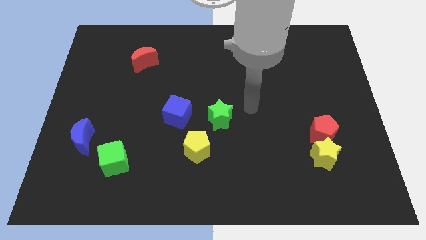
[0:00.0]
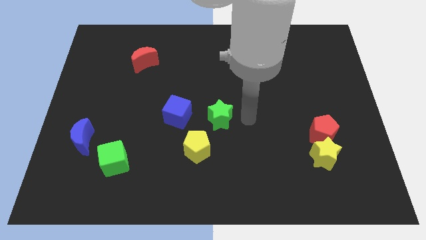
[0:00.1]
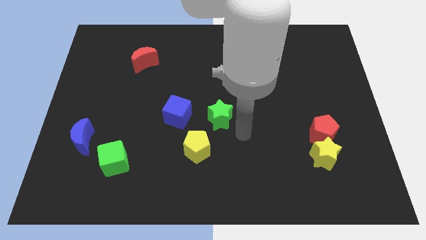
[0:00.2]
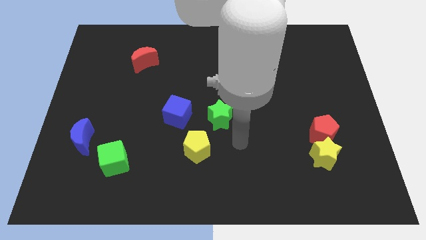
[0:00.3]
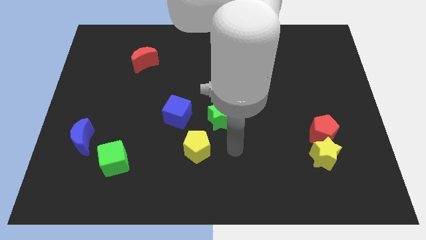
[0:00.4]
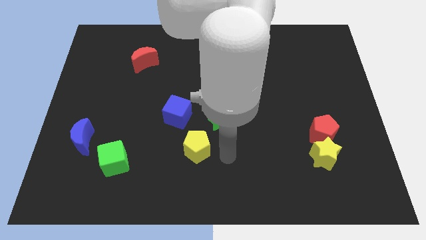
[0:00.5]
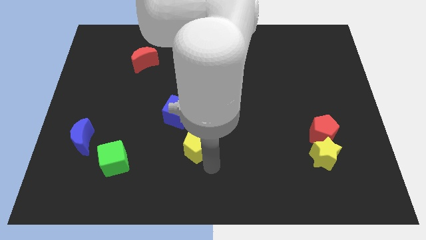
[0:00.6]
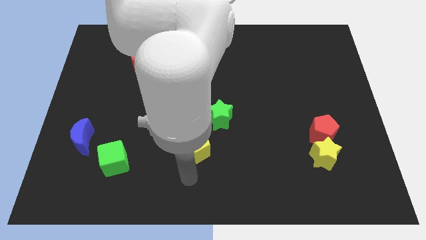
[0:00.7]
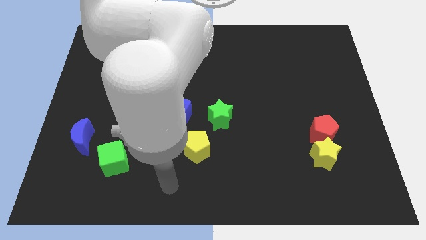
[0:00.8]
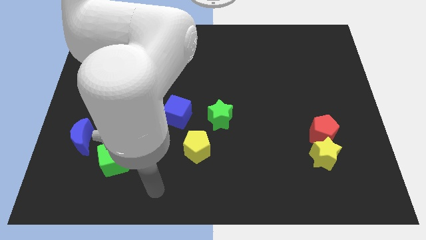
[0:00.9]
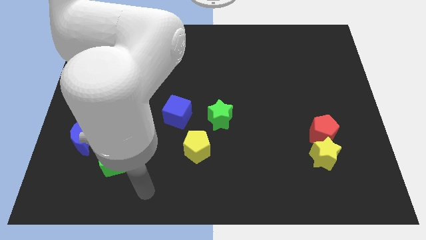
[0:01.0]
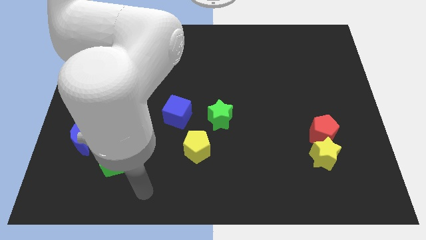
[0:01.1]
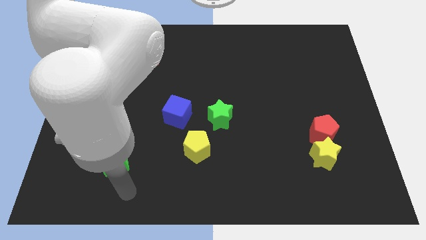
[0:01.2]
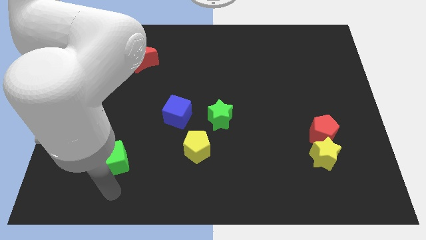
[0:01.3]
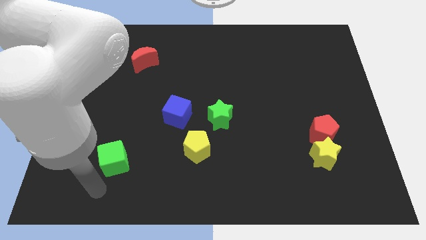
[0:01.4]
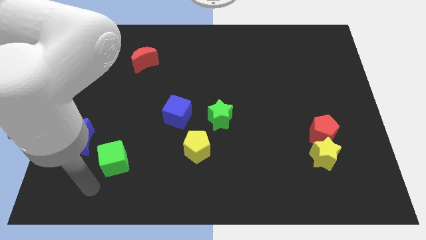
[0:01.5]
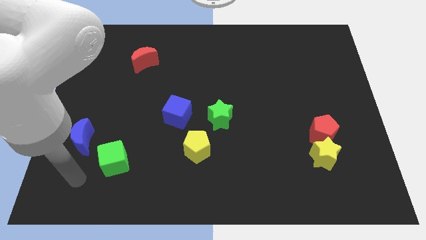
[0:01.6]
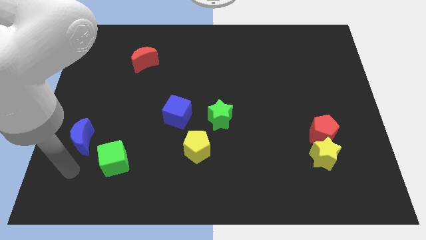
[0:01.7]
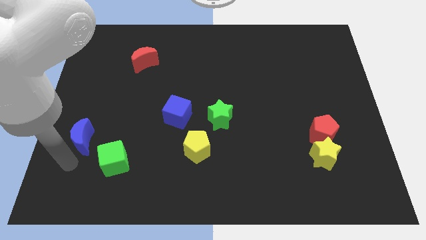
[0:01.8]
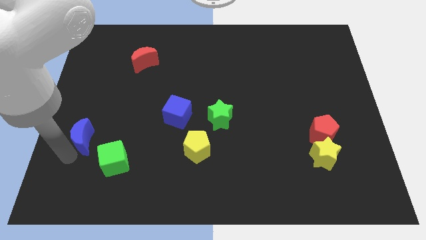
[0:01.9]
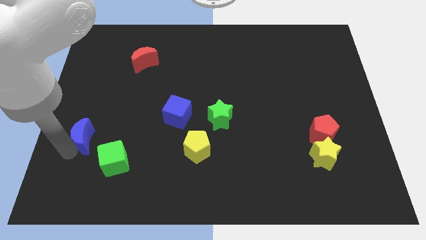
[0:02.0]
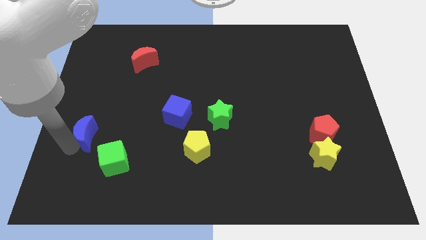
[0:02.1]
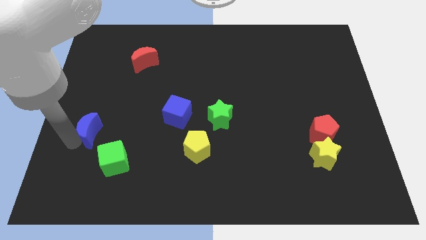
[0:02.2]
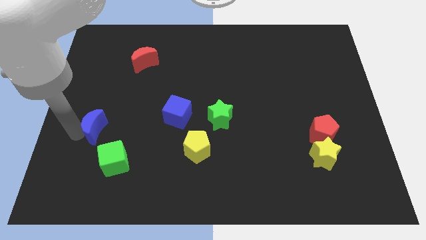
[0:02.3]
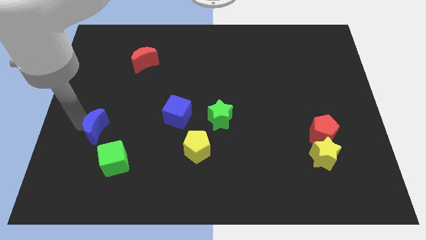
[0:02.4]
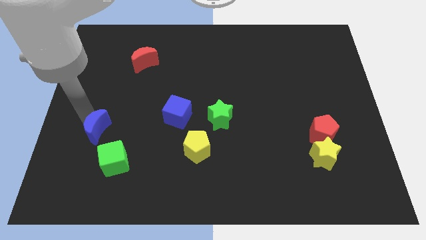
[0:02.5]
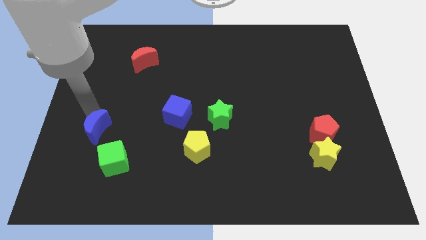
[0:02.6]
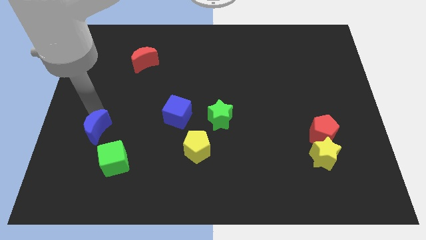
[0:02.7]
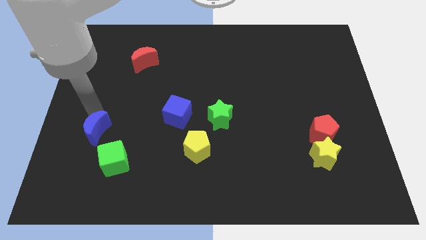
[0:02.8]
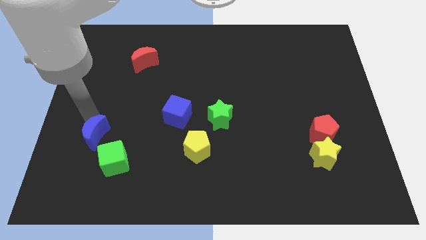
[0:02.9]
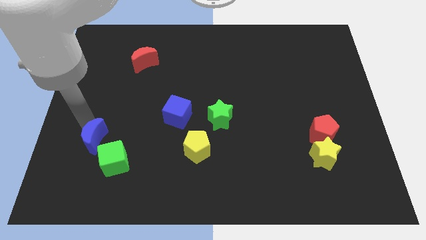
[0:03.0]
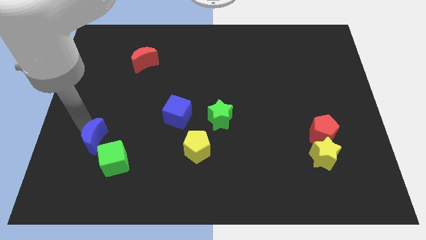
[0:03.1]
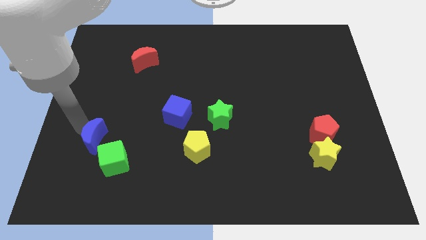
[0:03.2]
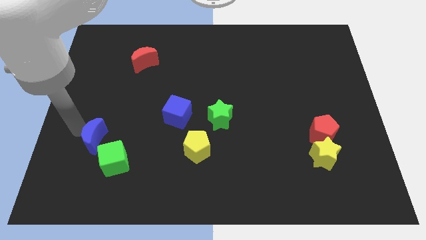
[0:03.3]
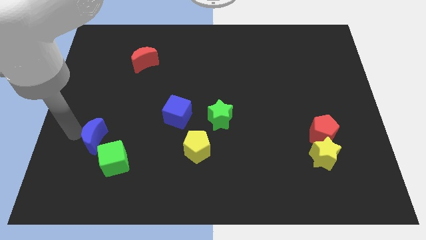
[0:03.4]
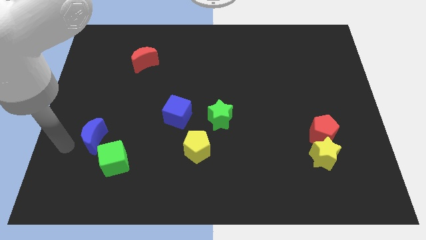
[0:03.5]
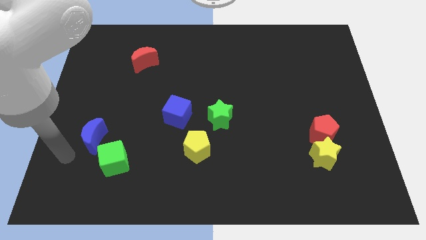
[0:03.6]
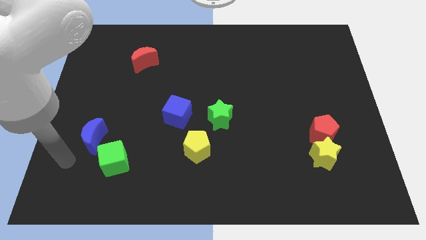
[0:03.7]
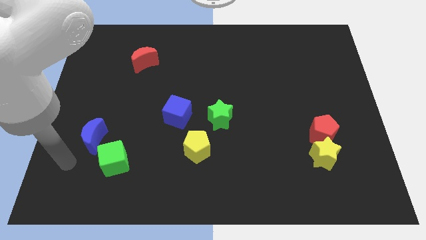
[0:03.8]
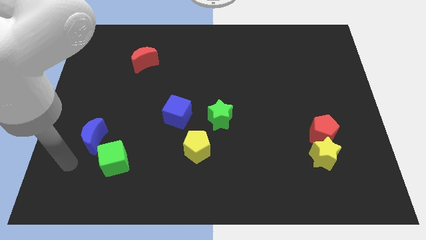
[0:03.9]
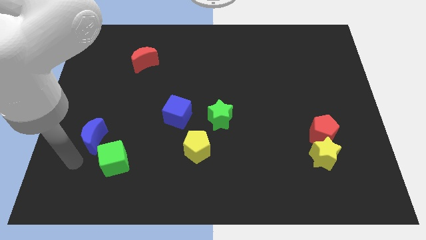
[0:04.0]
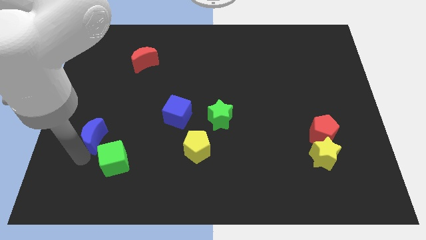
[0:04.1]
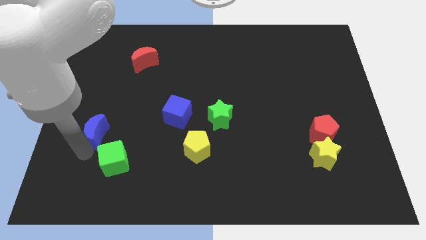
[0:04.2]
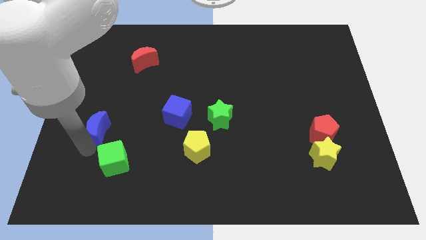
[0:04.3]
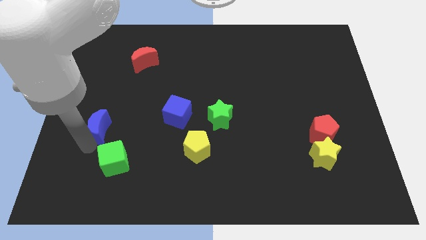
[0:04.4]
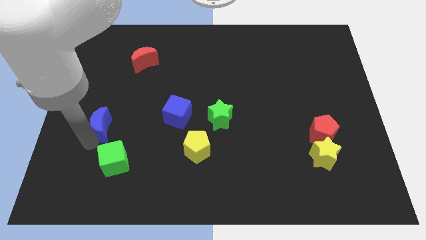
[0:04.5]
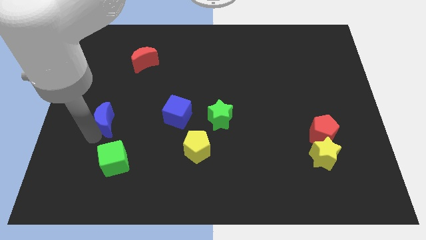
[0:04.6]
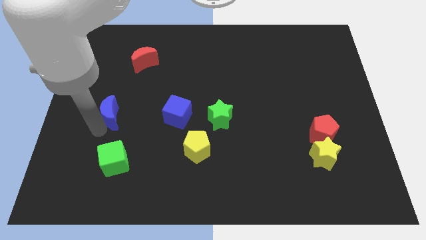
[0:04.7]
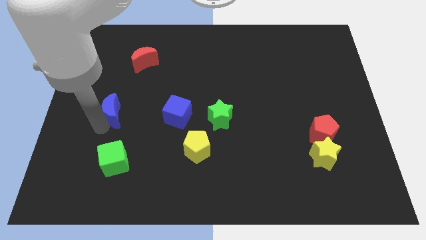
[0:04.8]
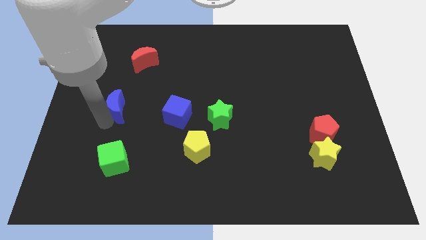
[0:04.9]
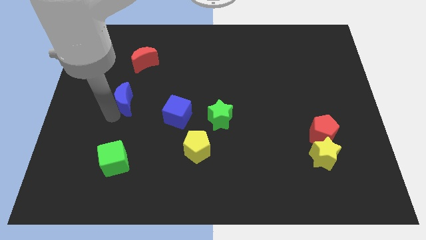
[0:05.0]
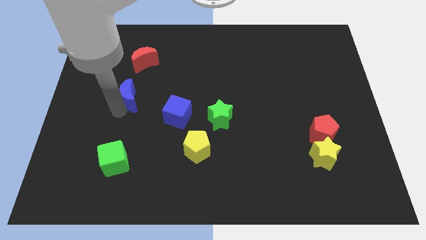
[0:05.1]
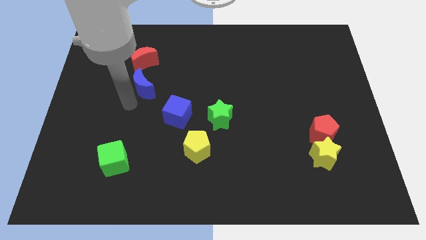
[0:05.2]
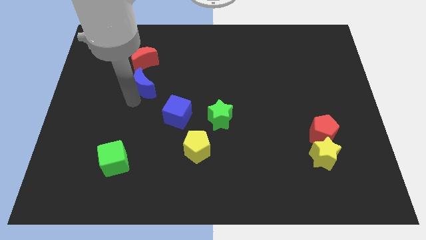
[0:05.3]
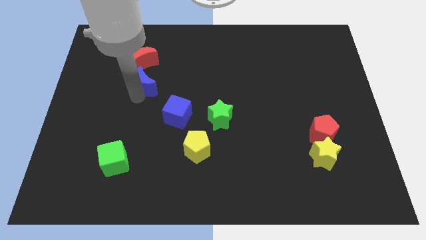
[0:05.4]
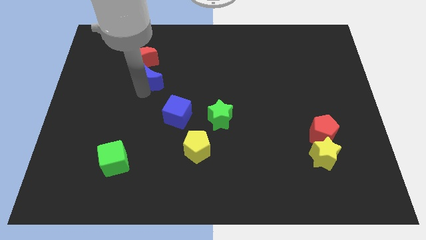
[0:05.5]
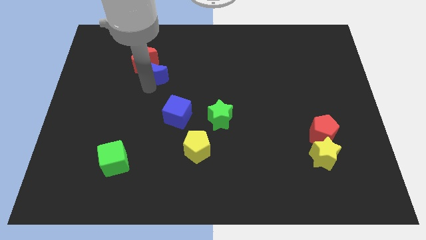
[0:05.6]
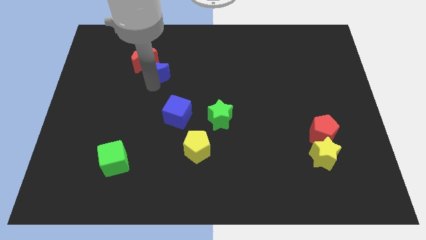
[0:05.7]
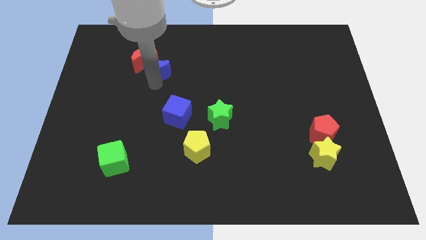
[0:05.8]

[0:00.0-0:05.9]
slide the blue moon next to the red moon

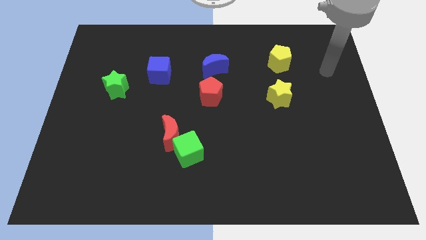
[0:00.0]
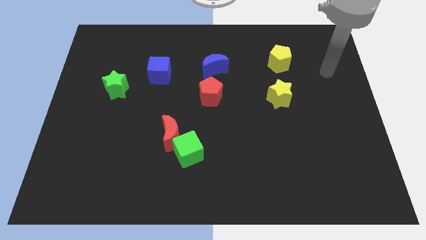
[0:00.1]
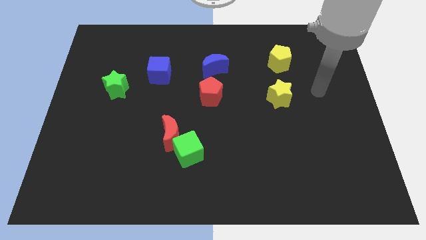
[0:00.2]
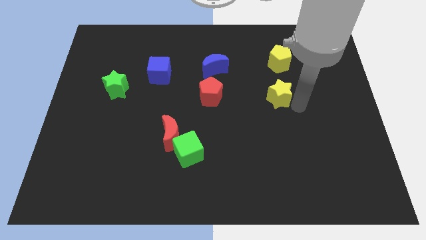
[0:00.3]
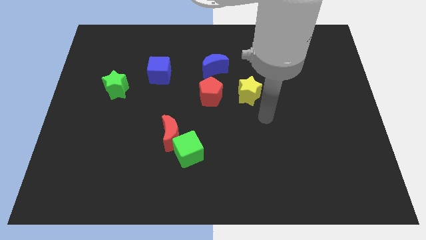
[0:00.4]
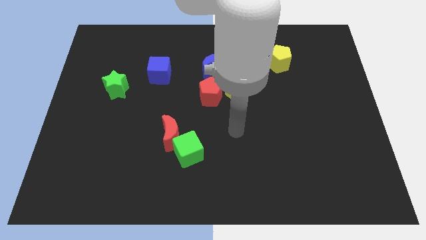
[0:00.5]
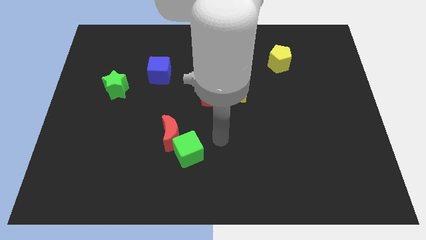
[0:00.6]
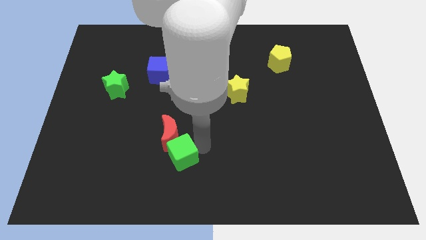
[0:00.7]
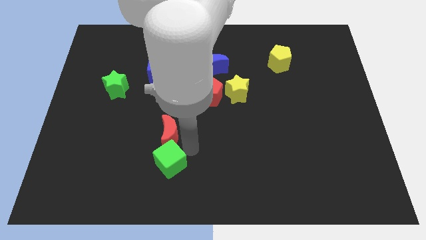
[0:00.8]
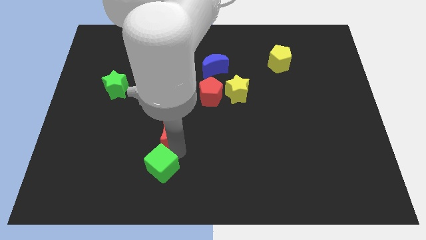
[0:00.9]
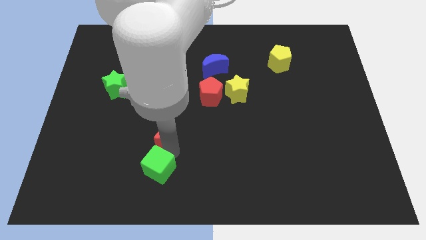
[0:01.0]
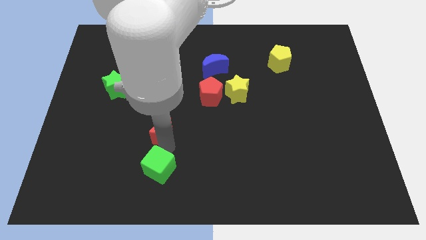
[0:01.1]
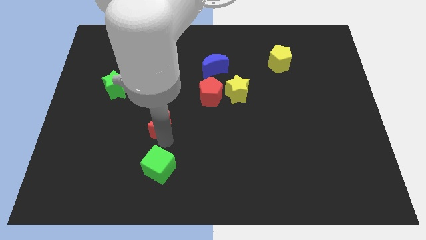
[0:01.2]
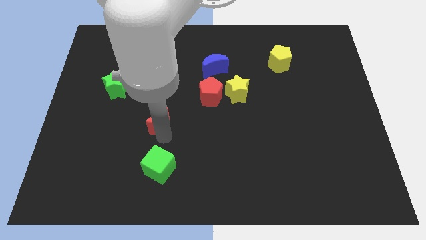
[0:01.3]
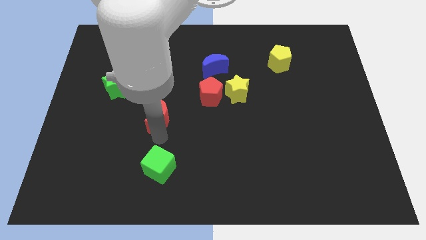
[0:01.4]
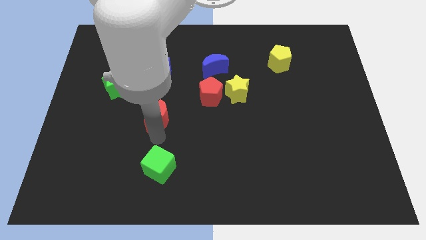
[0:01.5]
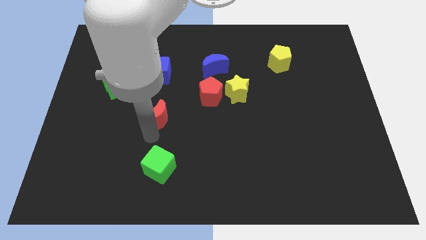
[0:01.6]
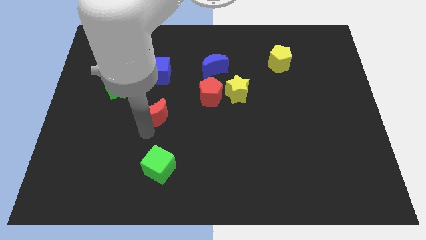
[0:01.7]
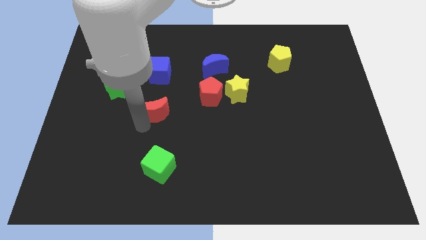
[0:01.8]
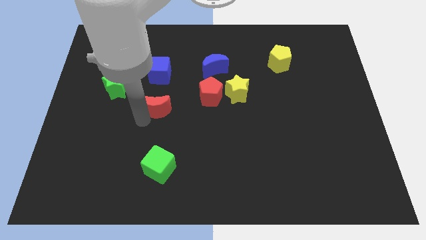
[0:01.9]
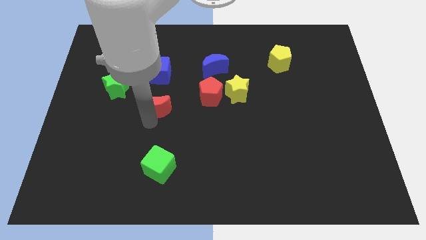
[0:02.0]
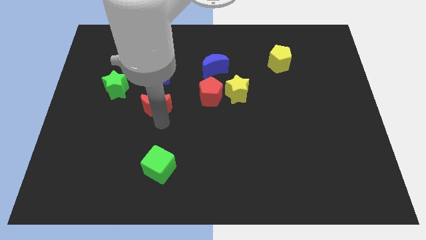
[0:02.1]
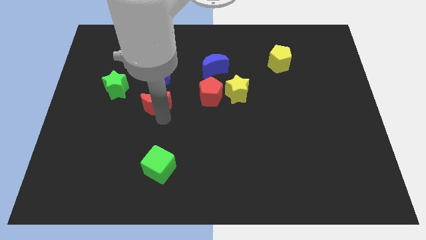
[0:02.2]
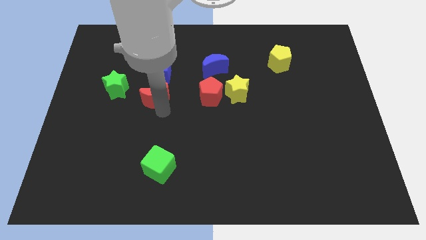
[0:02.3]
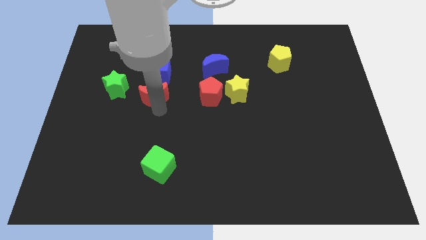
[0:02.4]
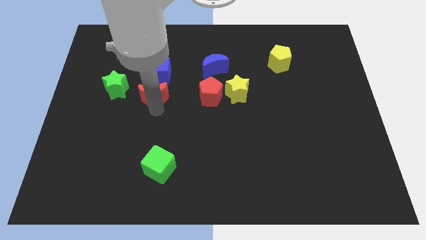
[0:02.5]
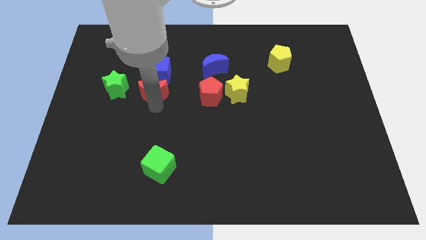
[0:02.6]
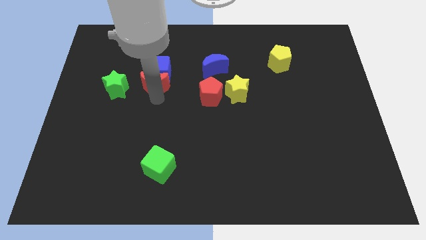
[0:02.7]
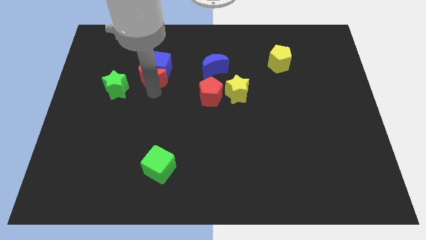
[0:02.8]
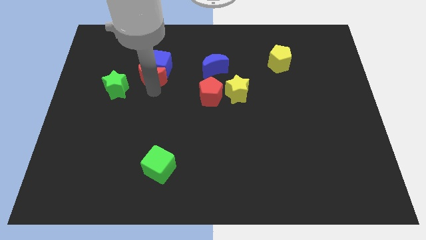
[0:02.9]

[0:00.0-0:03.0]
move the red moon towards the blue cube
